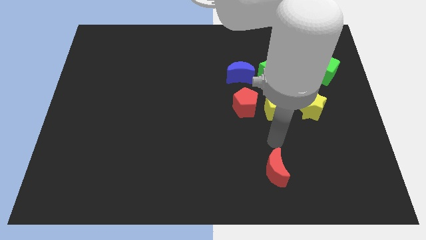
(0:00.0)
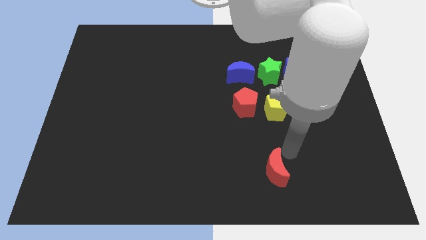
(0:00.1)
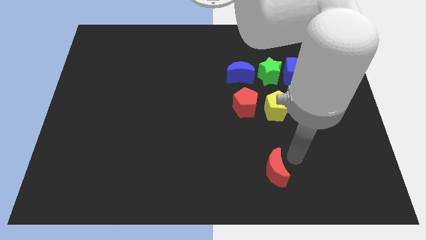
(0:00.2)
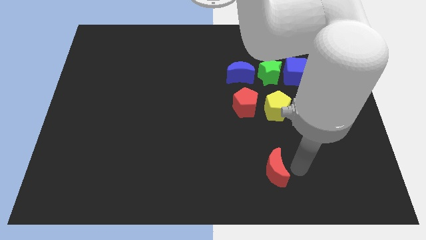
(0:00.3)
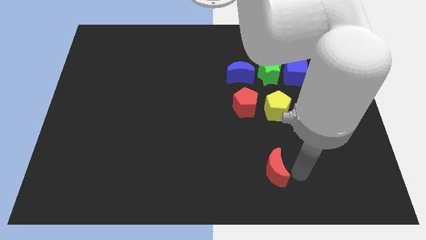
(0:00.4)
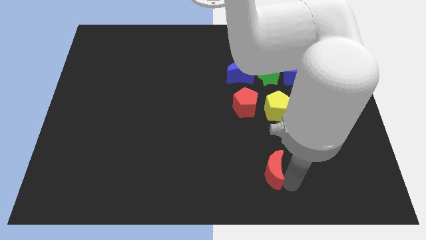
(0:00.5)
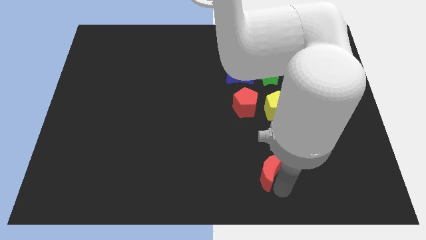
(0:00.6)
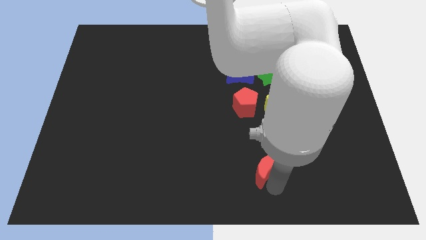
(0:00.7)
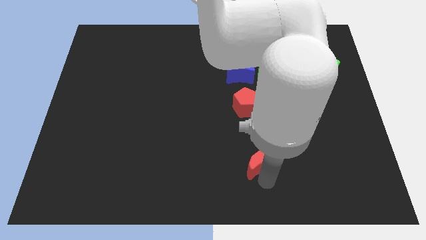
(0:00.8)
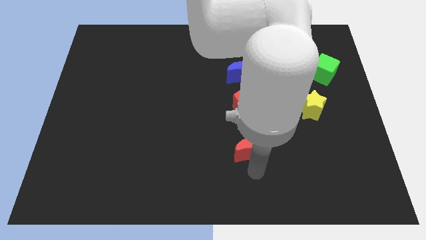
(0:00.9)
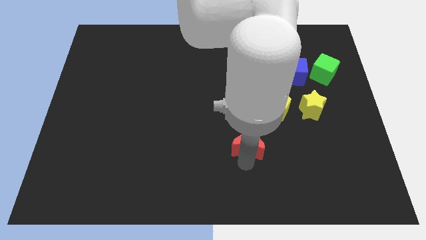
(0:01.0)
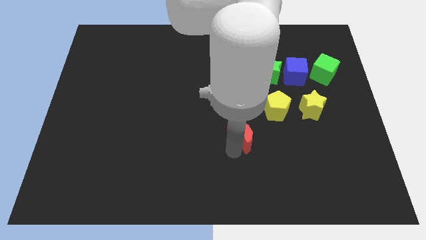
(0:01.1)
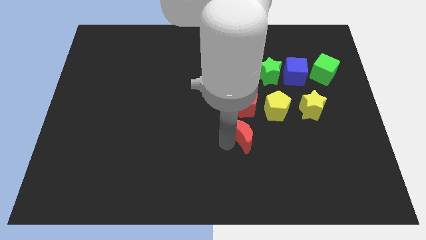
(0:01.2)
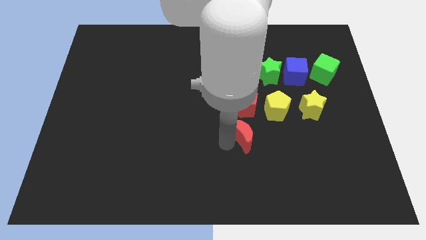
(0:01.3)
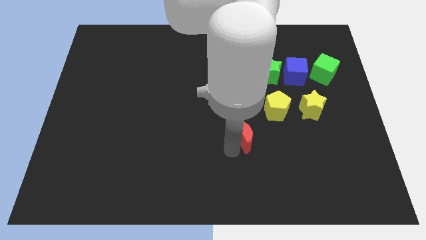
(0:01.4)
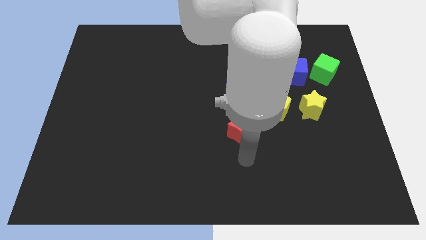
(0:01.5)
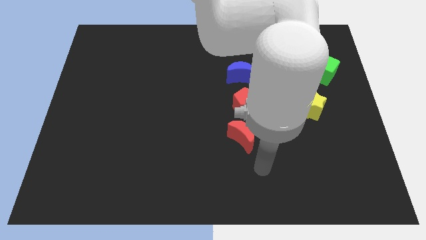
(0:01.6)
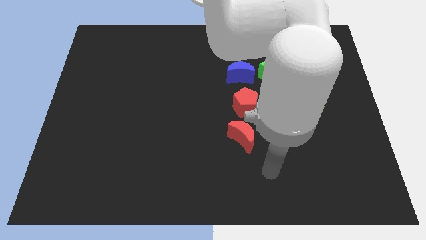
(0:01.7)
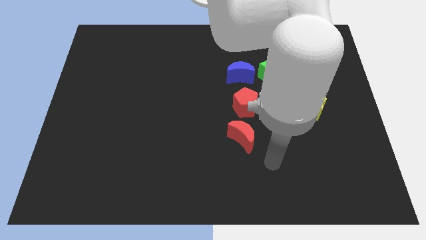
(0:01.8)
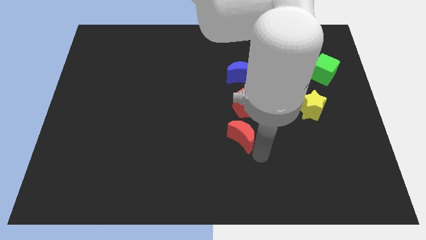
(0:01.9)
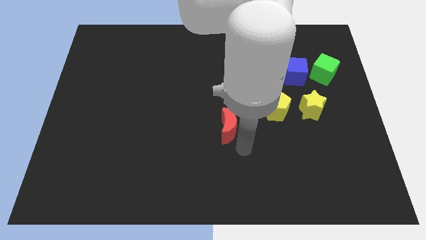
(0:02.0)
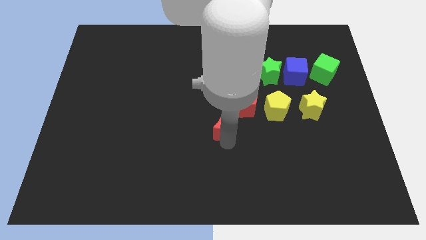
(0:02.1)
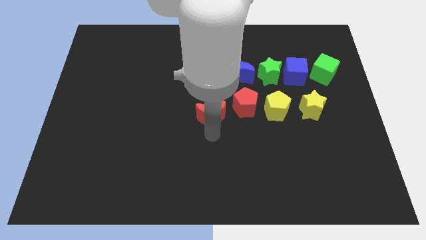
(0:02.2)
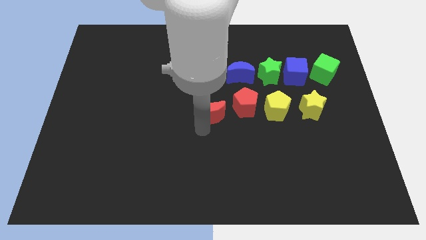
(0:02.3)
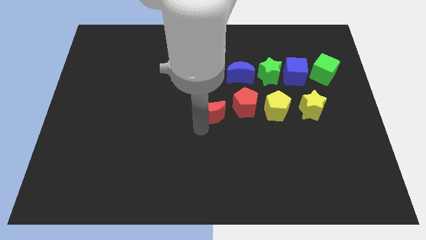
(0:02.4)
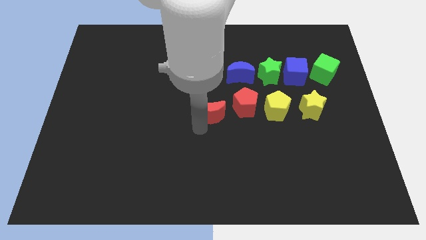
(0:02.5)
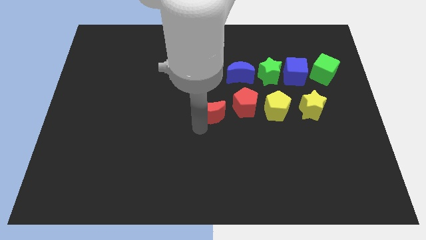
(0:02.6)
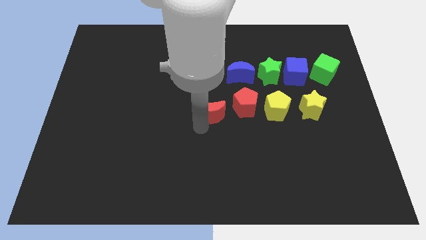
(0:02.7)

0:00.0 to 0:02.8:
push red moon diagonally upwards

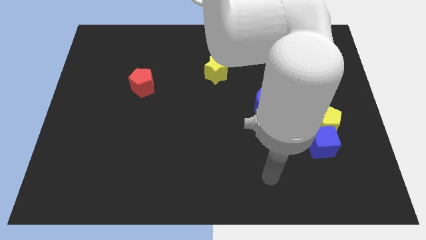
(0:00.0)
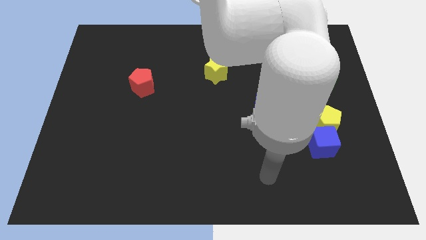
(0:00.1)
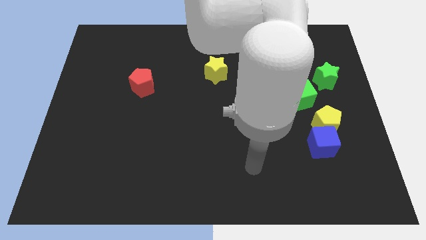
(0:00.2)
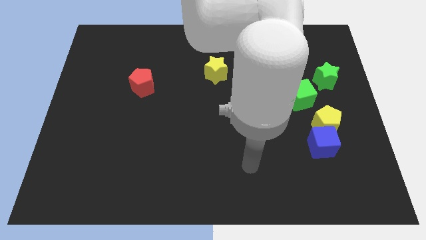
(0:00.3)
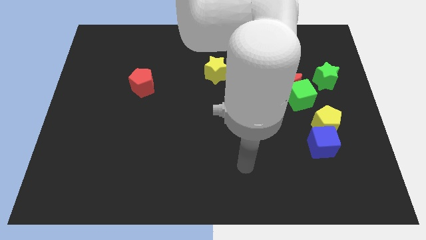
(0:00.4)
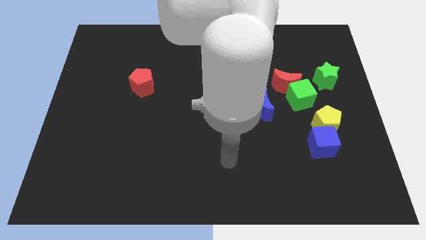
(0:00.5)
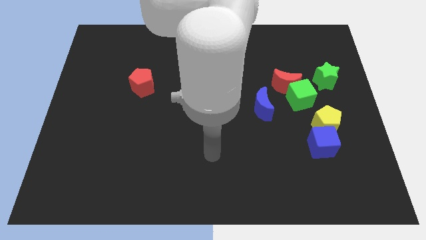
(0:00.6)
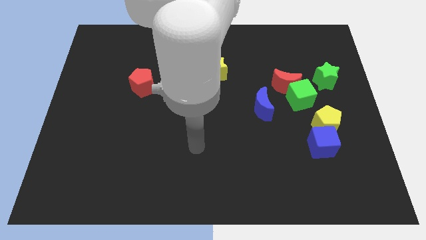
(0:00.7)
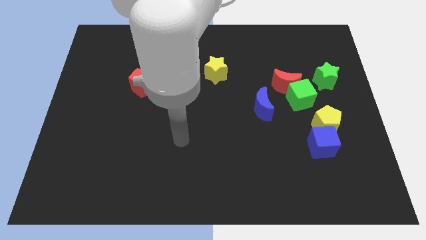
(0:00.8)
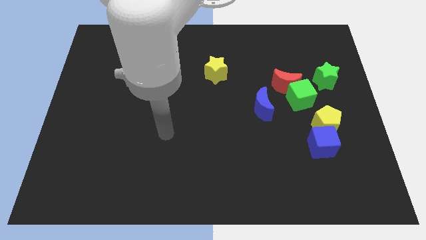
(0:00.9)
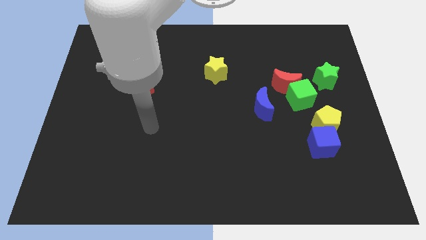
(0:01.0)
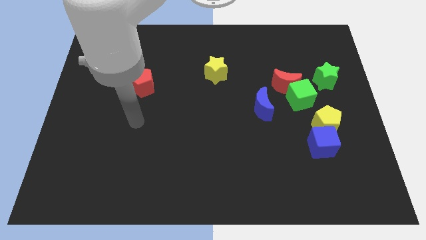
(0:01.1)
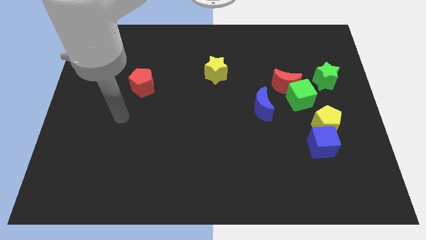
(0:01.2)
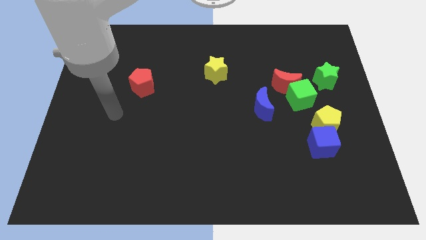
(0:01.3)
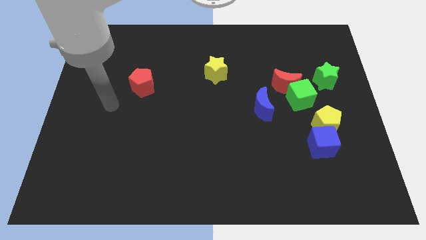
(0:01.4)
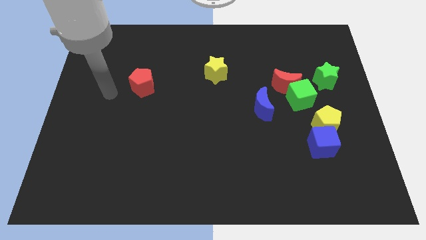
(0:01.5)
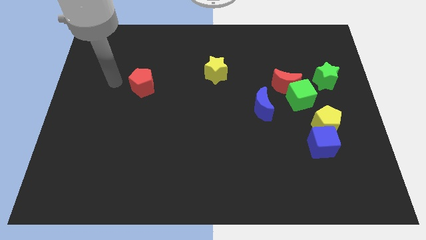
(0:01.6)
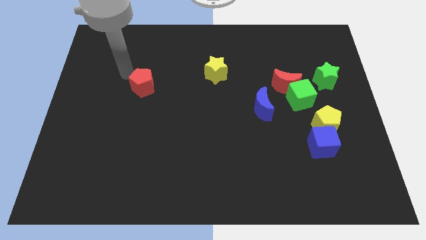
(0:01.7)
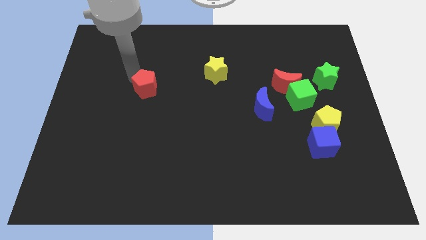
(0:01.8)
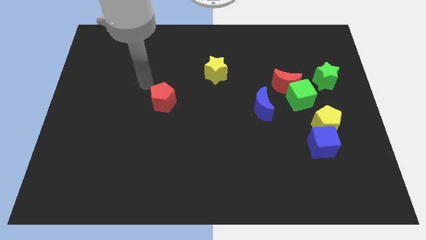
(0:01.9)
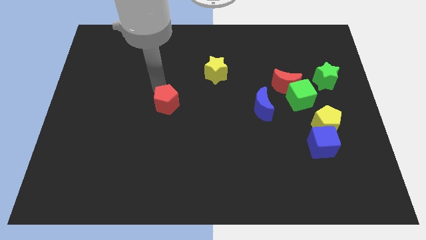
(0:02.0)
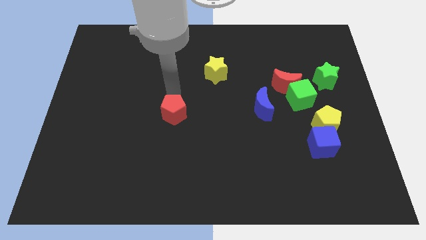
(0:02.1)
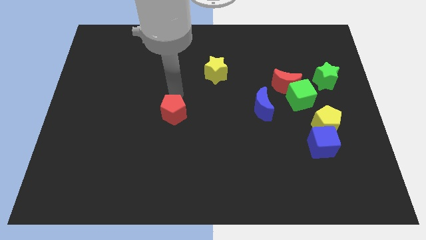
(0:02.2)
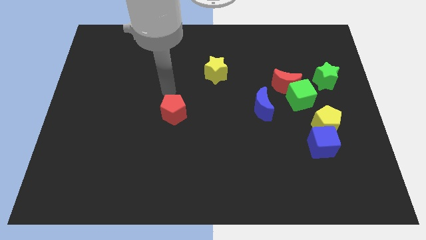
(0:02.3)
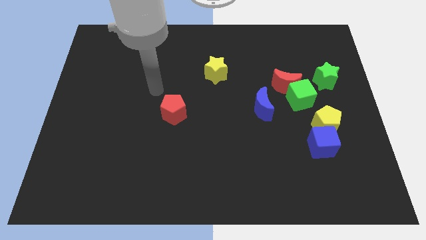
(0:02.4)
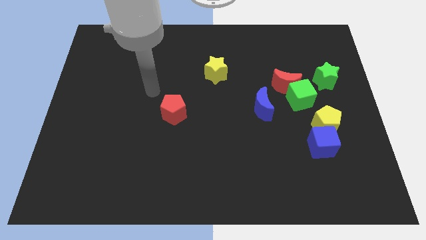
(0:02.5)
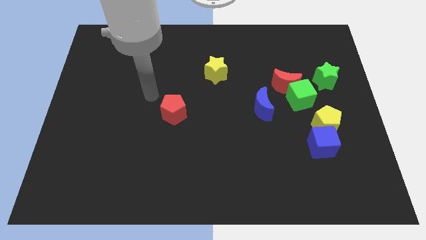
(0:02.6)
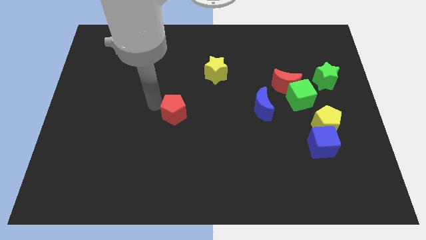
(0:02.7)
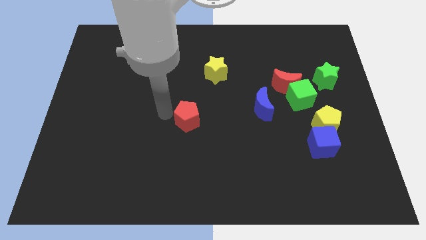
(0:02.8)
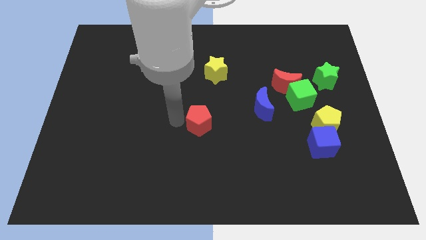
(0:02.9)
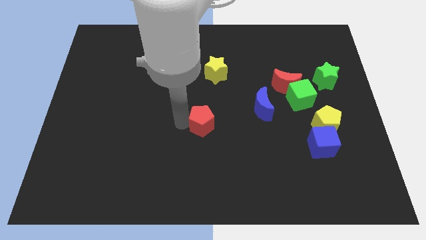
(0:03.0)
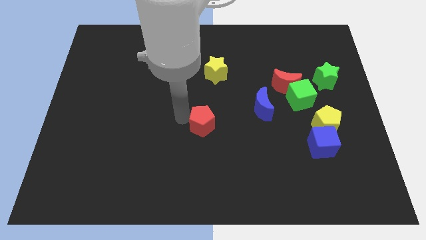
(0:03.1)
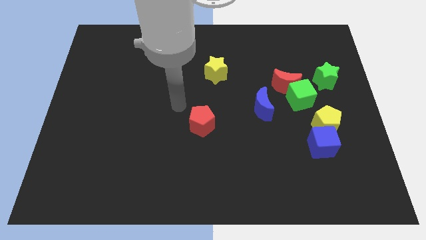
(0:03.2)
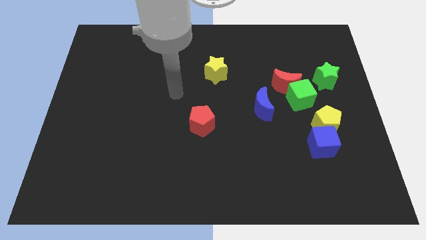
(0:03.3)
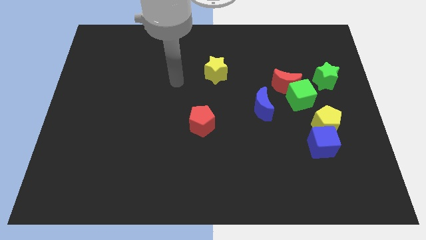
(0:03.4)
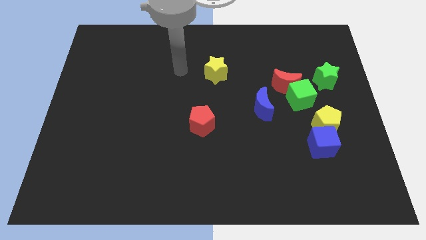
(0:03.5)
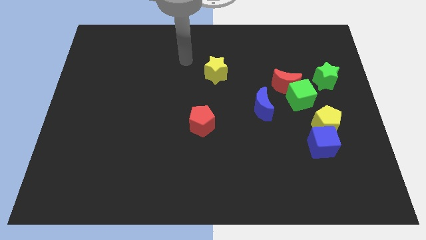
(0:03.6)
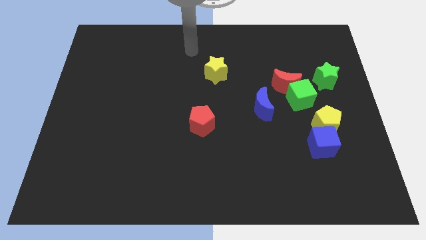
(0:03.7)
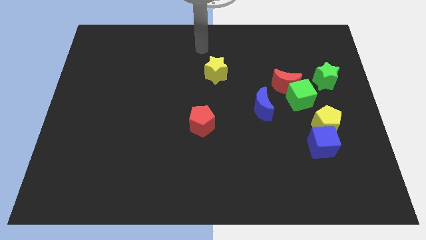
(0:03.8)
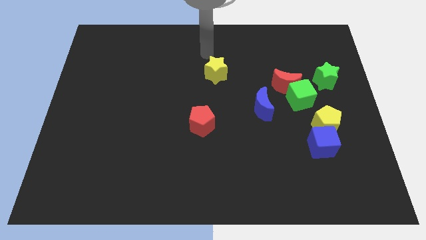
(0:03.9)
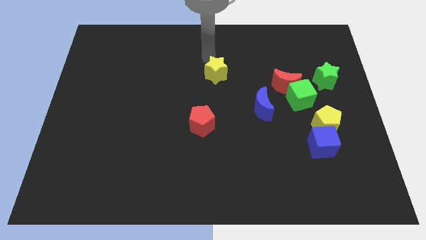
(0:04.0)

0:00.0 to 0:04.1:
place the red pentagon below the yellow star

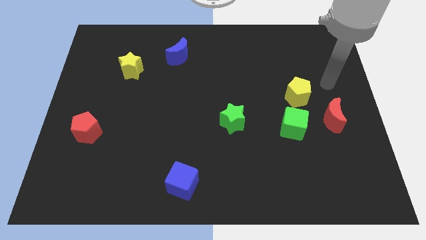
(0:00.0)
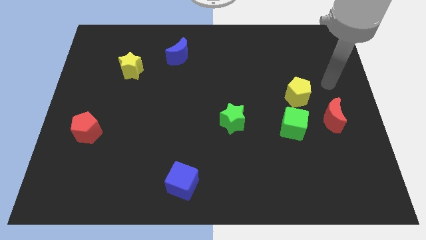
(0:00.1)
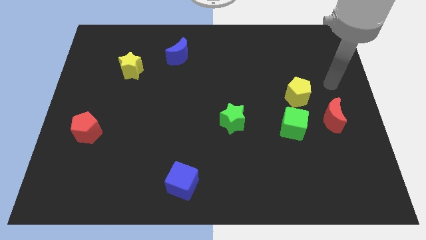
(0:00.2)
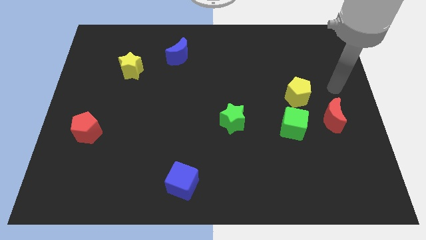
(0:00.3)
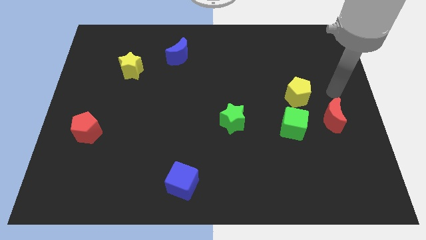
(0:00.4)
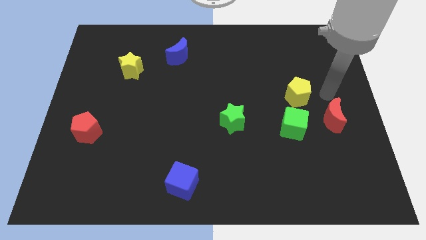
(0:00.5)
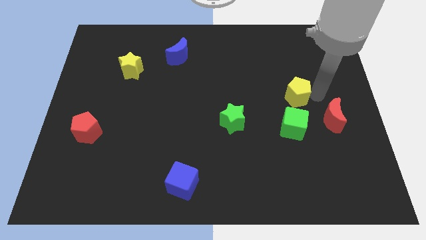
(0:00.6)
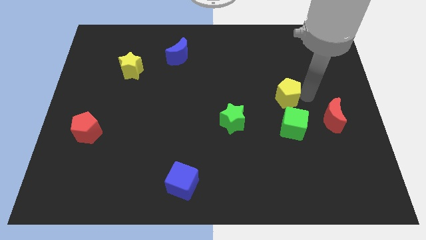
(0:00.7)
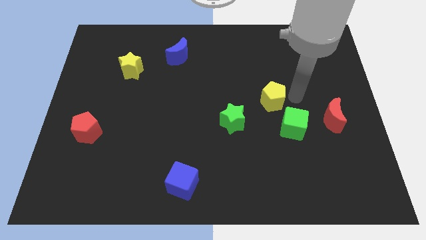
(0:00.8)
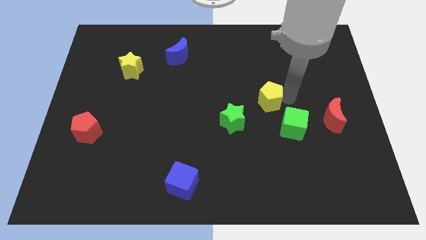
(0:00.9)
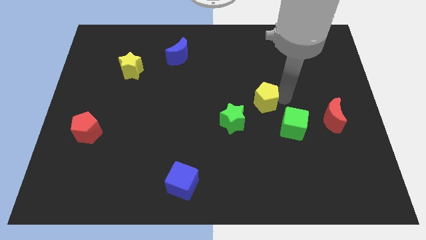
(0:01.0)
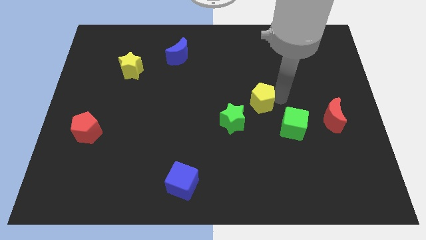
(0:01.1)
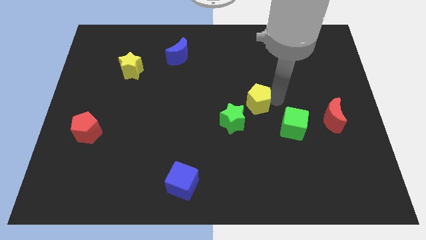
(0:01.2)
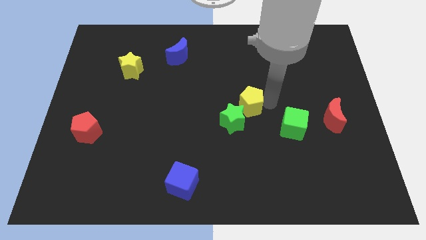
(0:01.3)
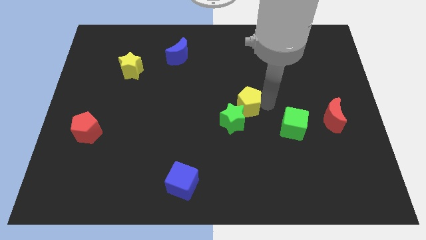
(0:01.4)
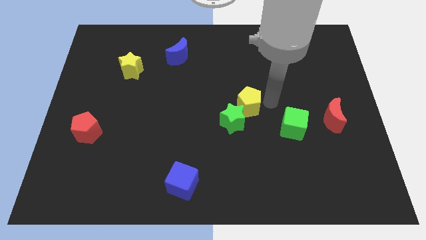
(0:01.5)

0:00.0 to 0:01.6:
place the yellow pentagon into the green star

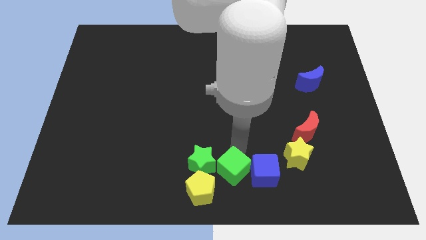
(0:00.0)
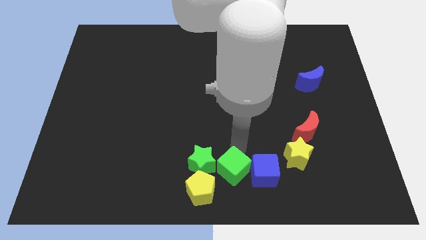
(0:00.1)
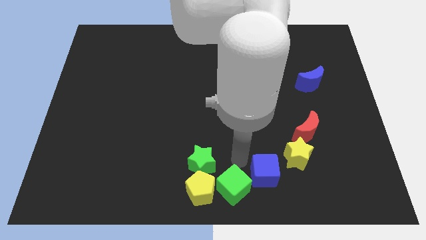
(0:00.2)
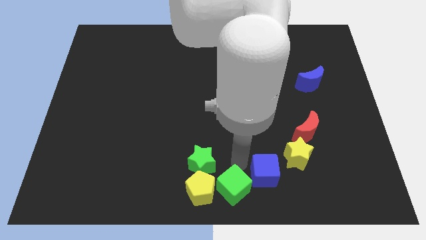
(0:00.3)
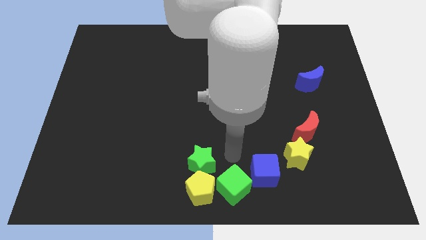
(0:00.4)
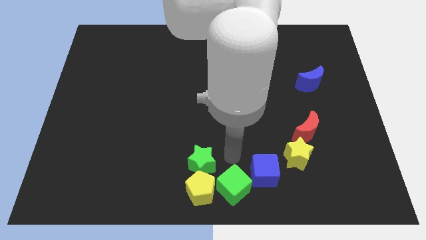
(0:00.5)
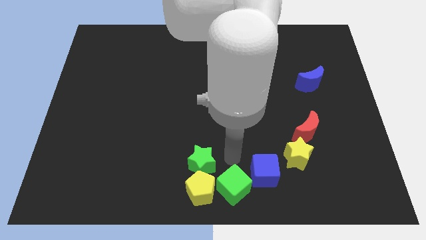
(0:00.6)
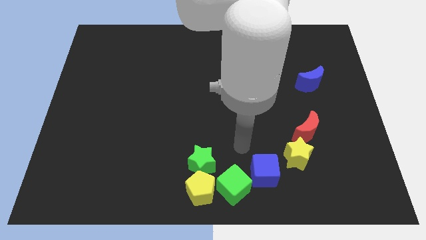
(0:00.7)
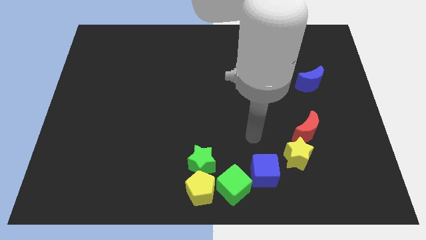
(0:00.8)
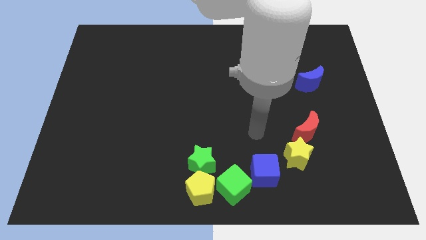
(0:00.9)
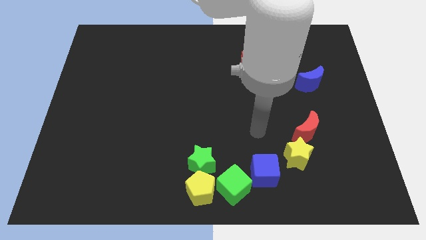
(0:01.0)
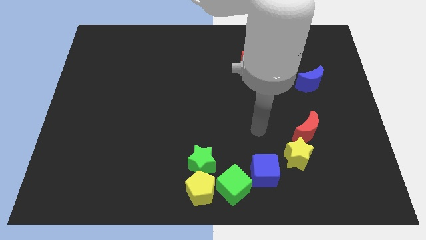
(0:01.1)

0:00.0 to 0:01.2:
push the green cube right to the yellow star
